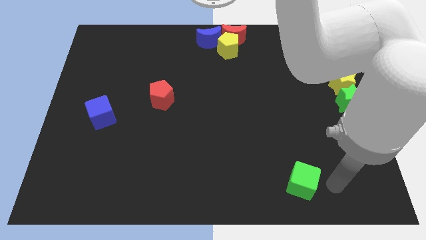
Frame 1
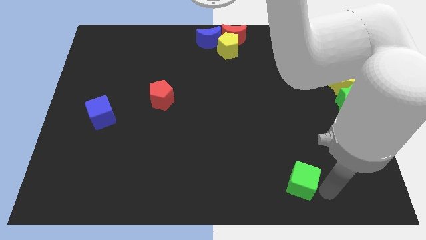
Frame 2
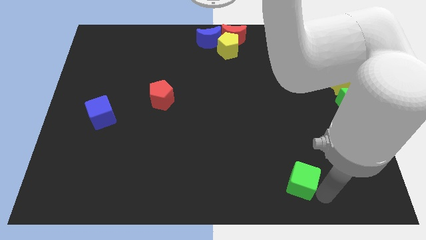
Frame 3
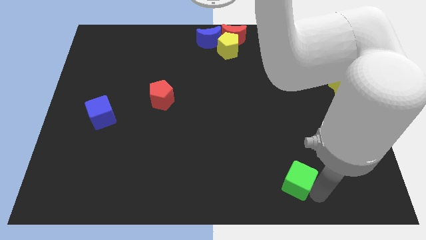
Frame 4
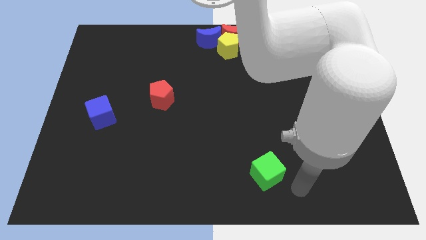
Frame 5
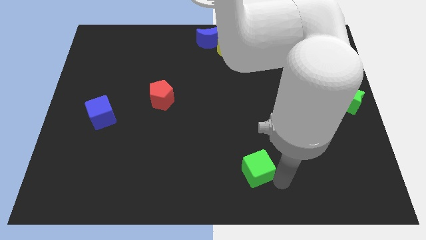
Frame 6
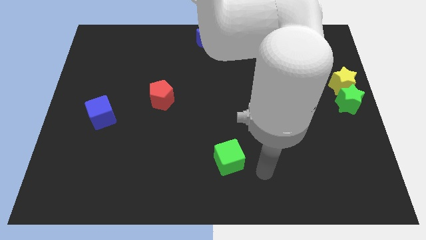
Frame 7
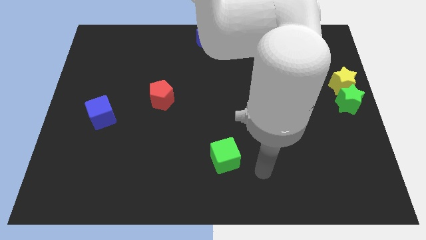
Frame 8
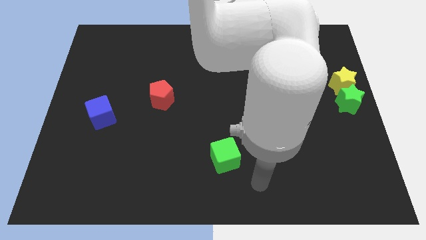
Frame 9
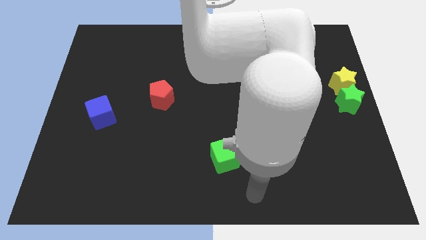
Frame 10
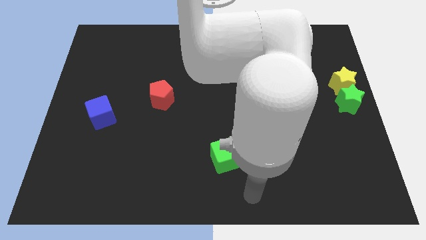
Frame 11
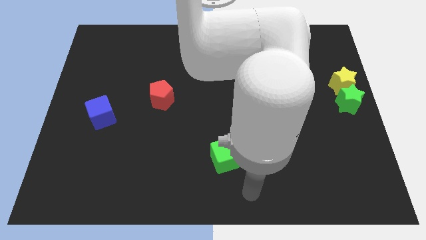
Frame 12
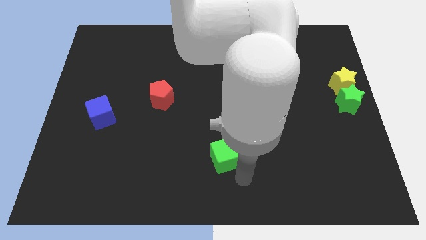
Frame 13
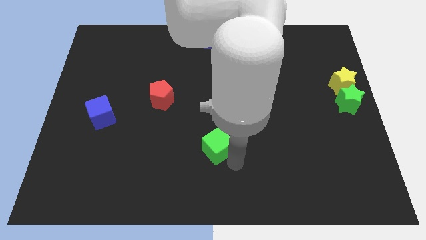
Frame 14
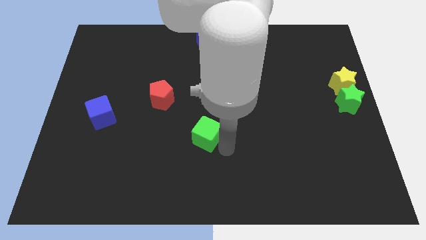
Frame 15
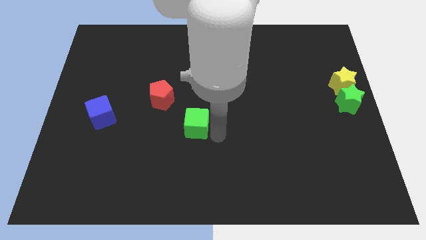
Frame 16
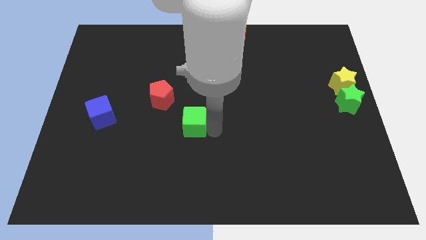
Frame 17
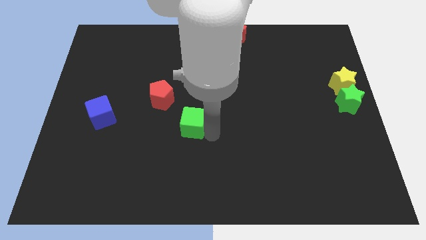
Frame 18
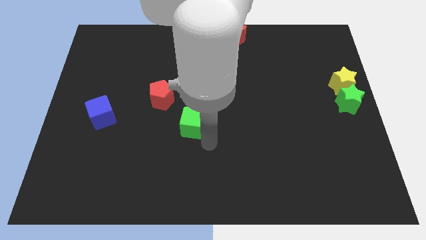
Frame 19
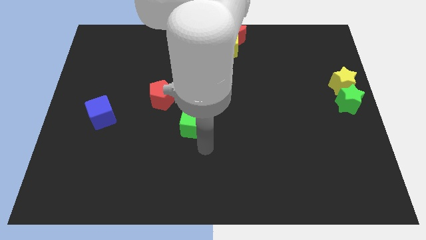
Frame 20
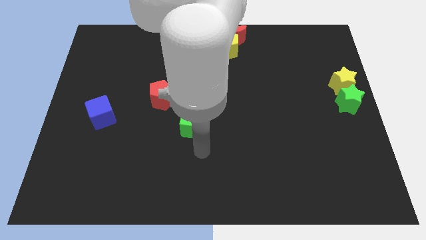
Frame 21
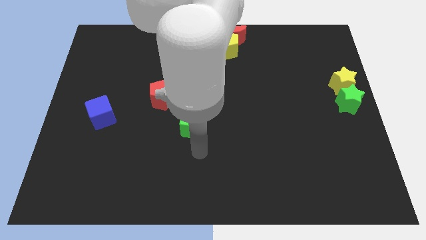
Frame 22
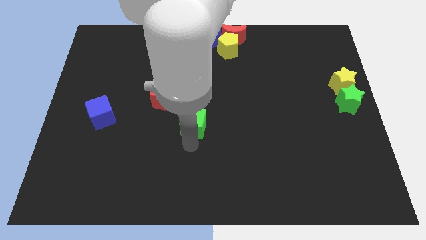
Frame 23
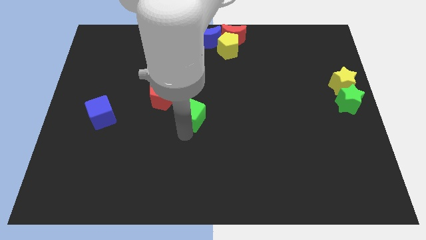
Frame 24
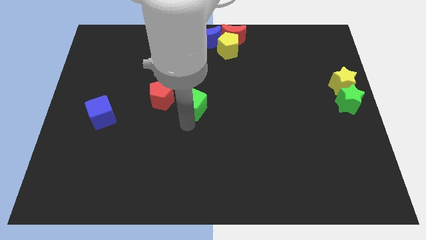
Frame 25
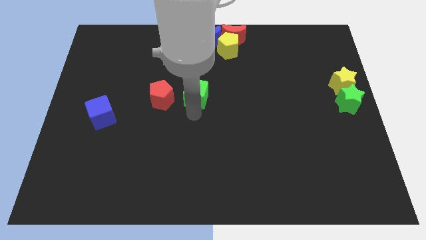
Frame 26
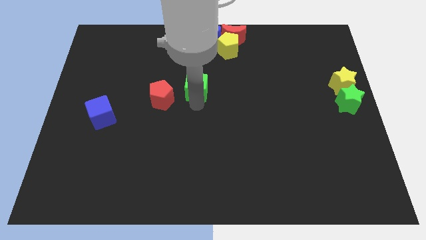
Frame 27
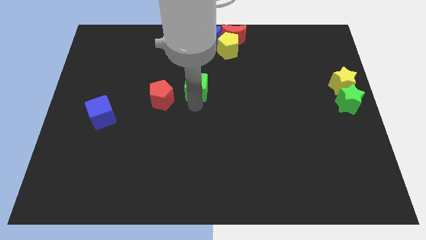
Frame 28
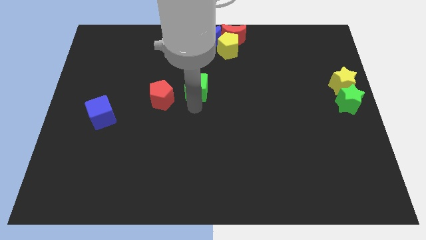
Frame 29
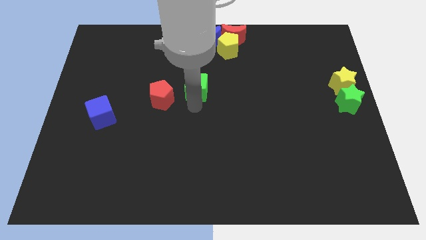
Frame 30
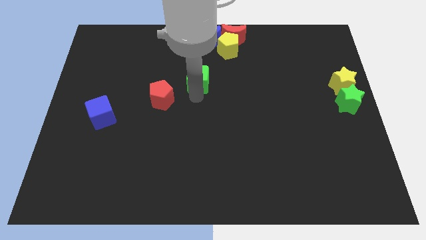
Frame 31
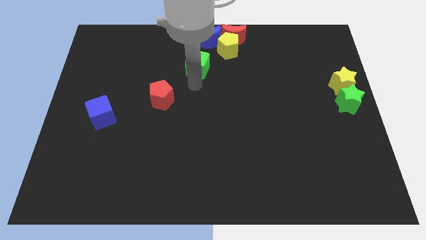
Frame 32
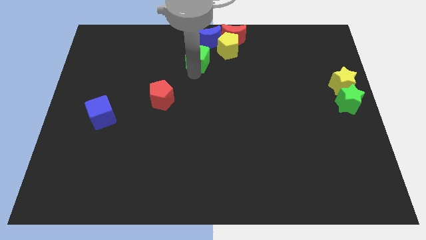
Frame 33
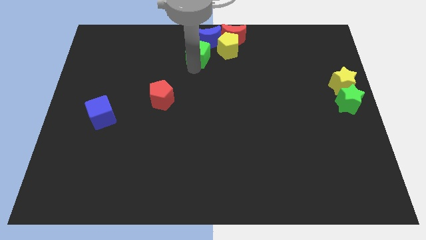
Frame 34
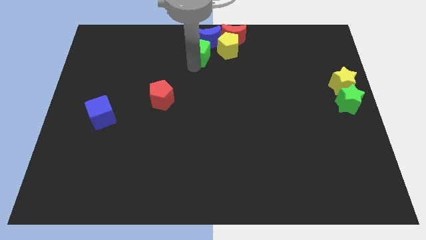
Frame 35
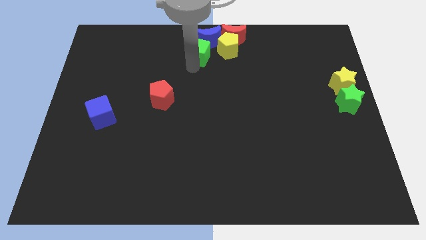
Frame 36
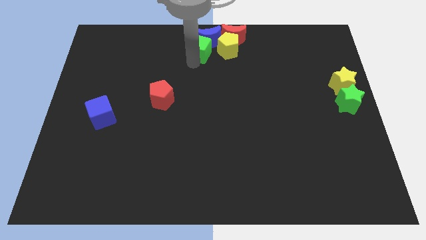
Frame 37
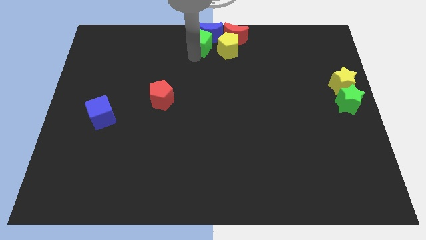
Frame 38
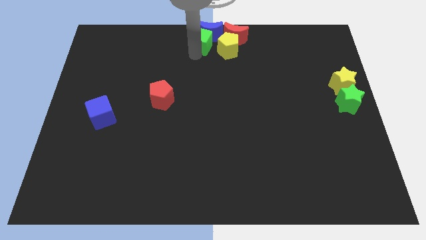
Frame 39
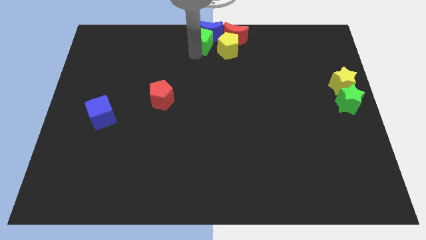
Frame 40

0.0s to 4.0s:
move the green cube into the blue crescent

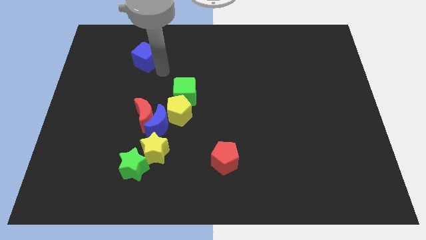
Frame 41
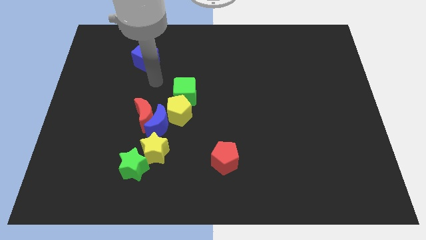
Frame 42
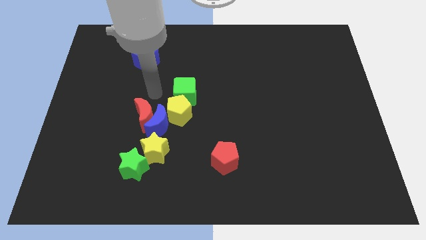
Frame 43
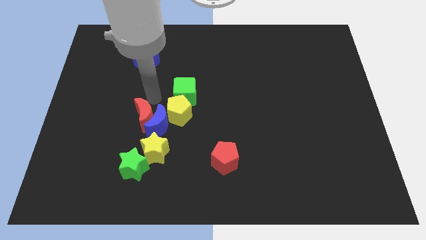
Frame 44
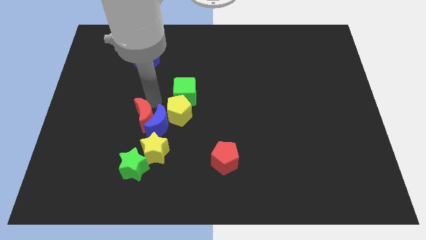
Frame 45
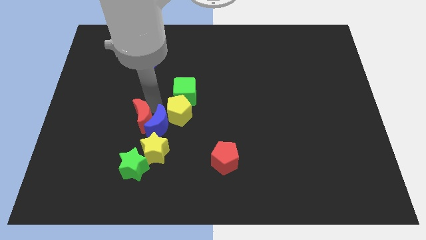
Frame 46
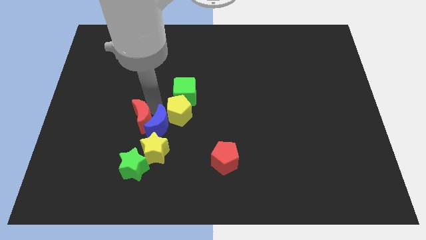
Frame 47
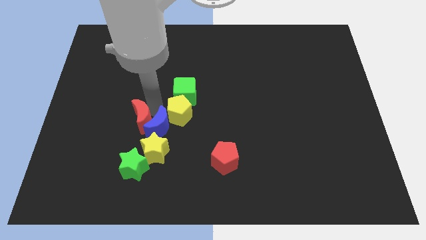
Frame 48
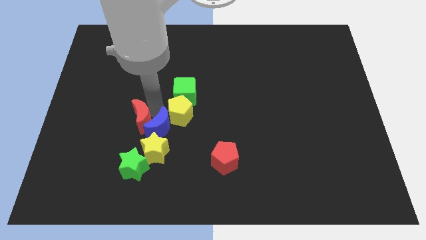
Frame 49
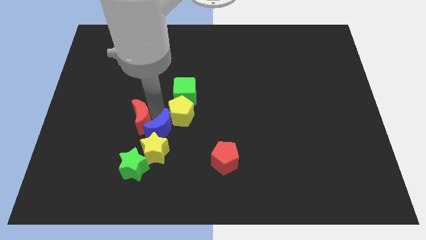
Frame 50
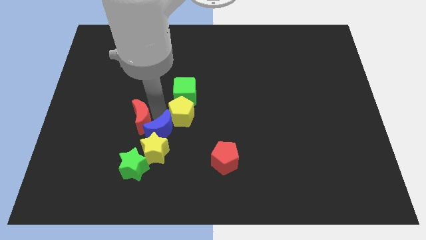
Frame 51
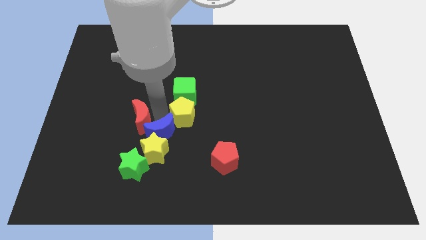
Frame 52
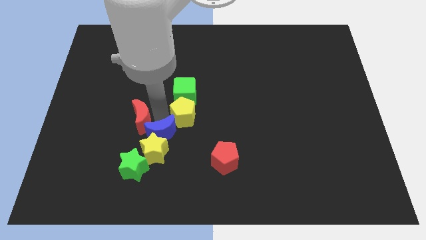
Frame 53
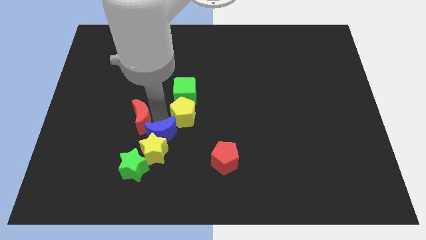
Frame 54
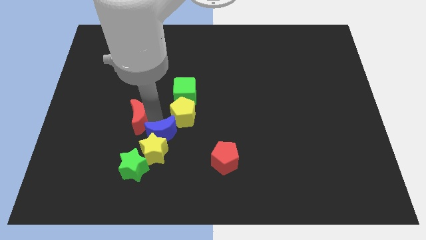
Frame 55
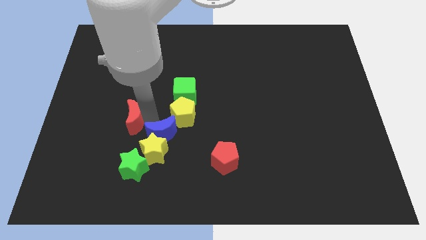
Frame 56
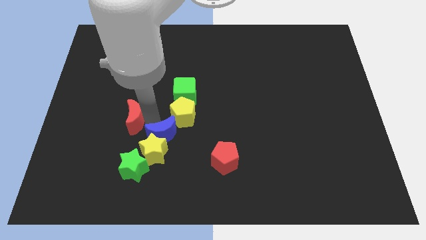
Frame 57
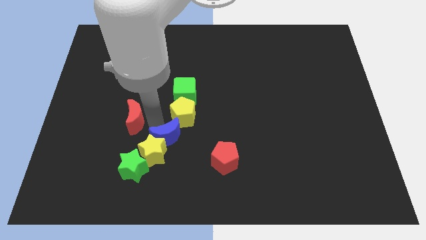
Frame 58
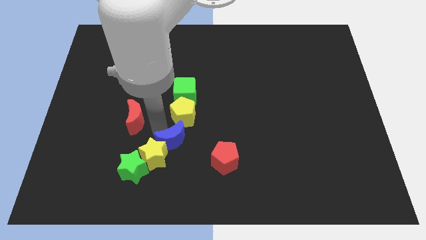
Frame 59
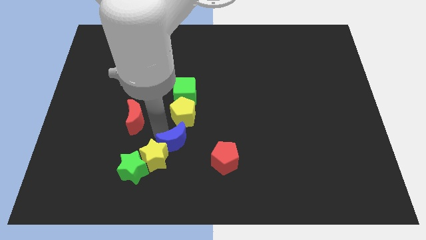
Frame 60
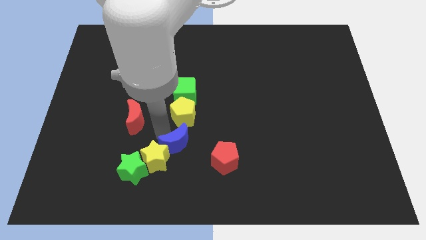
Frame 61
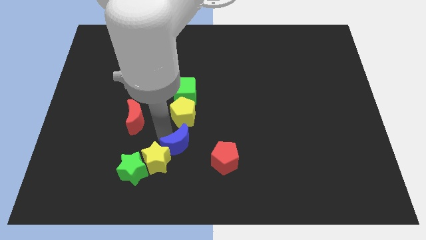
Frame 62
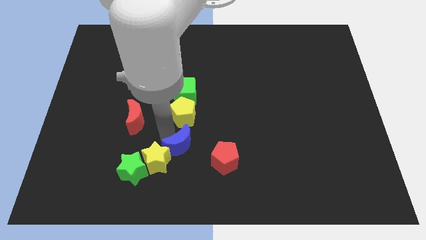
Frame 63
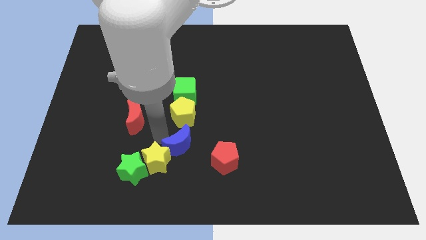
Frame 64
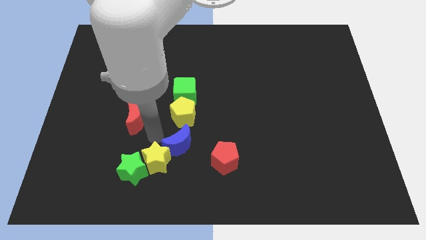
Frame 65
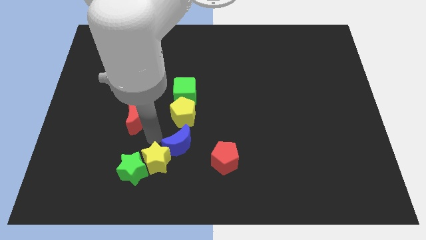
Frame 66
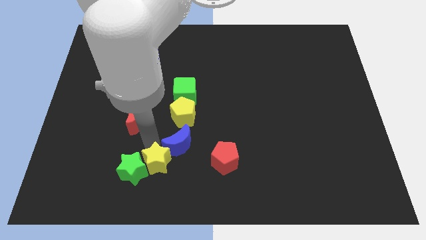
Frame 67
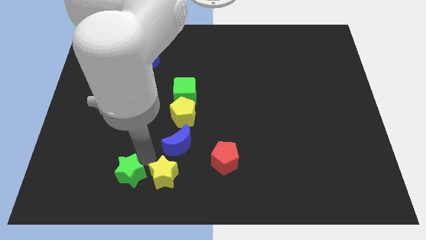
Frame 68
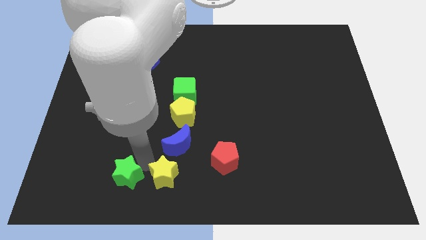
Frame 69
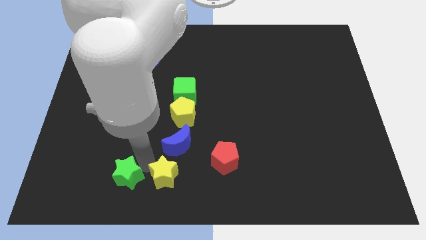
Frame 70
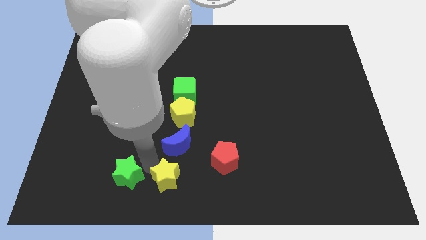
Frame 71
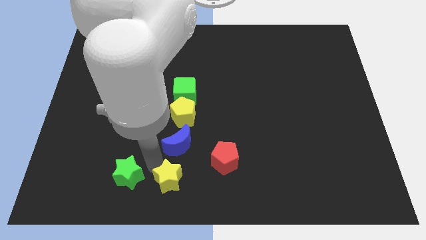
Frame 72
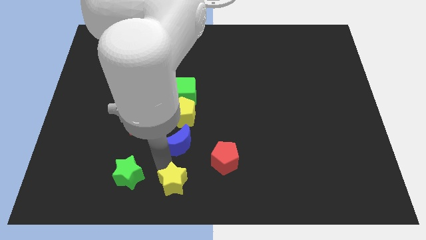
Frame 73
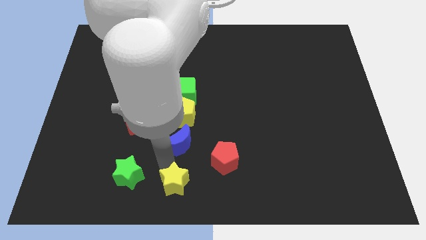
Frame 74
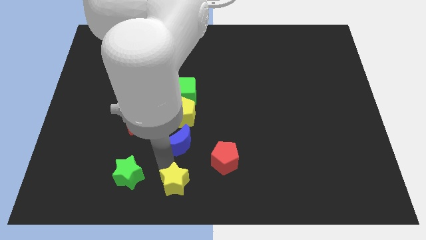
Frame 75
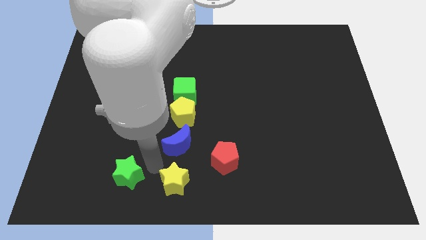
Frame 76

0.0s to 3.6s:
separate the green star and yellow star

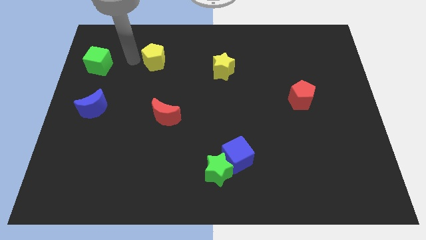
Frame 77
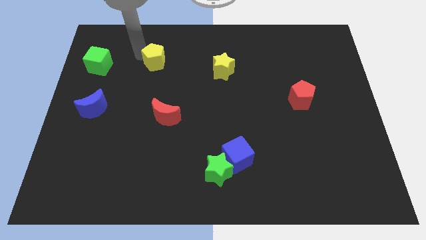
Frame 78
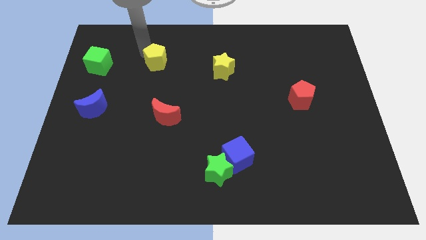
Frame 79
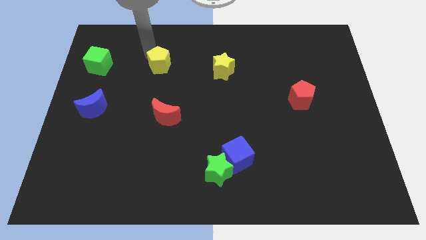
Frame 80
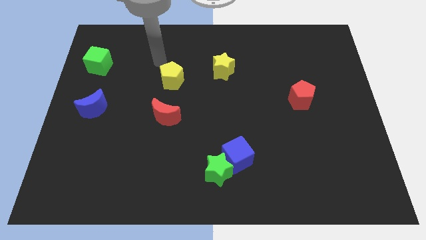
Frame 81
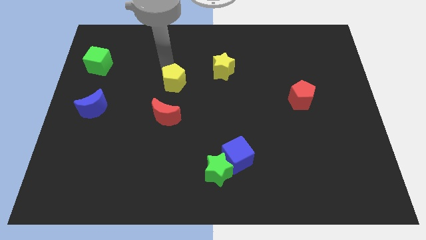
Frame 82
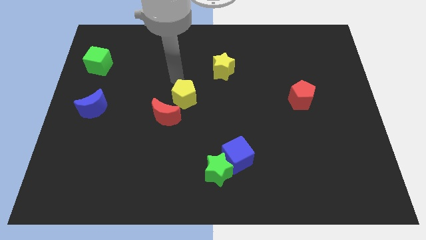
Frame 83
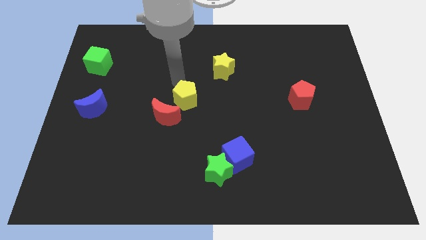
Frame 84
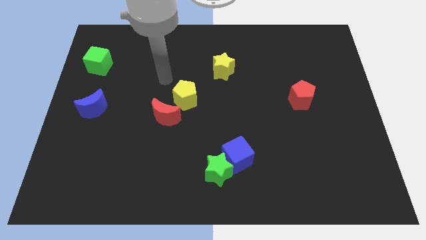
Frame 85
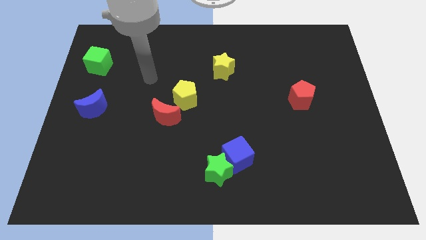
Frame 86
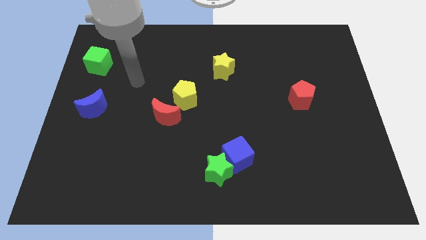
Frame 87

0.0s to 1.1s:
move the yellow pentagon near red moon
